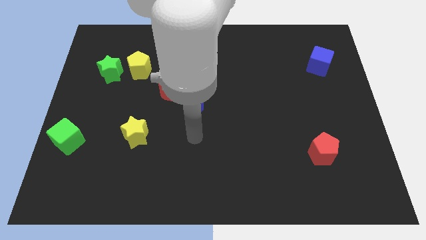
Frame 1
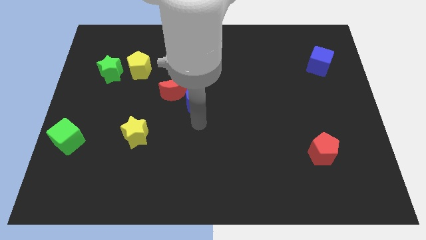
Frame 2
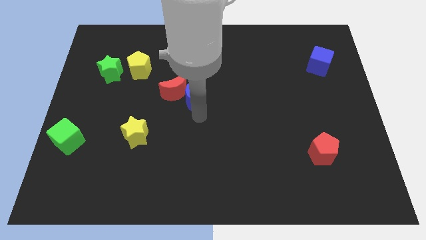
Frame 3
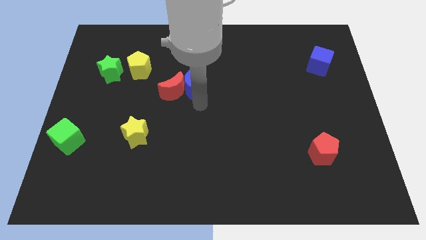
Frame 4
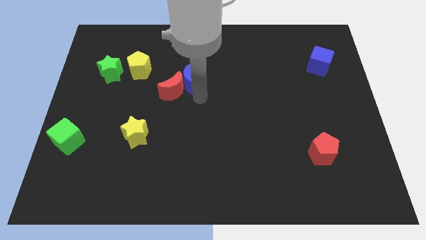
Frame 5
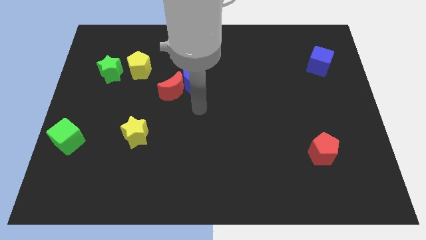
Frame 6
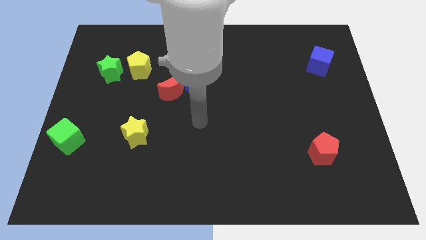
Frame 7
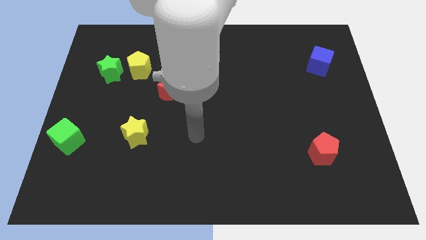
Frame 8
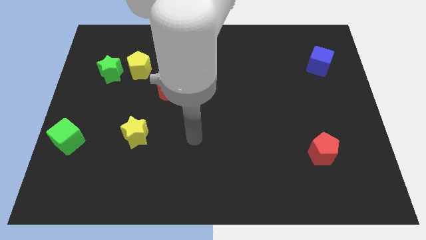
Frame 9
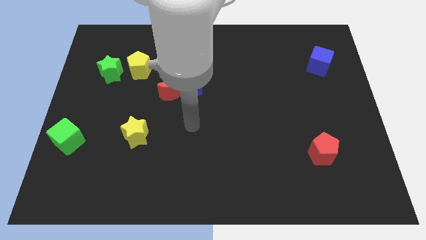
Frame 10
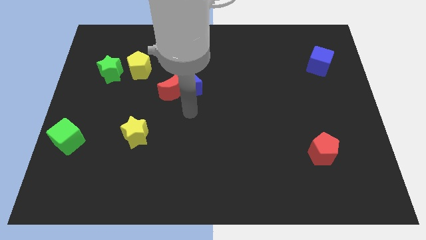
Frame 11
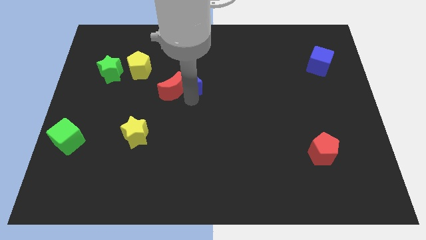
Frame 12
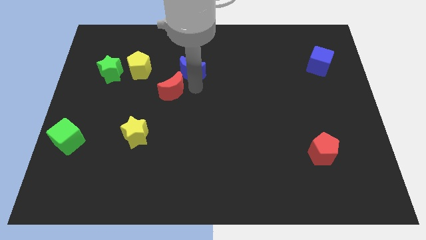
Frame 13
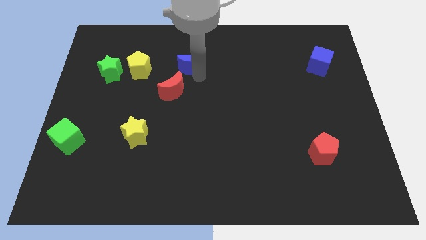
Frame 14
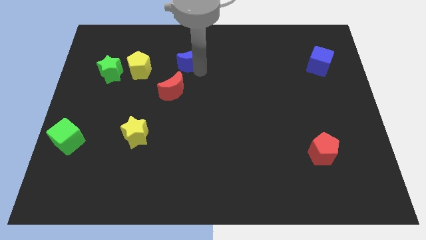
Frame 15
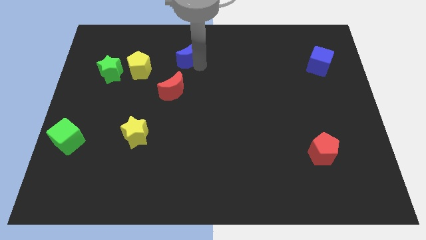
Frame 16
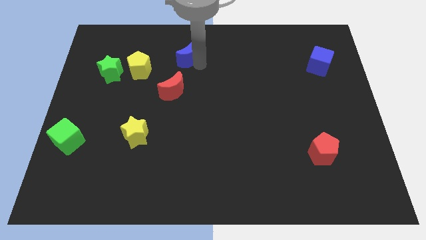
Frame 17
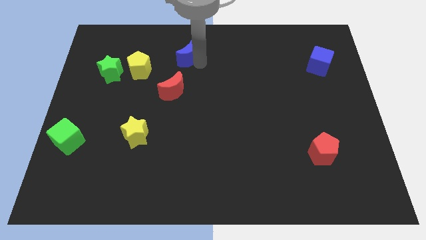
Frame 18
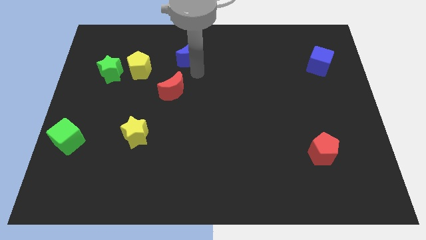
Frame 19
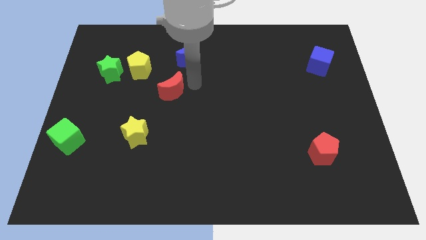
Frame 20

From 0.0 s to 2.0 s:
put the blue moon diagonally top right to the red moon

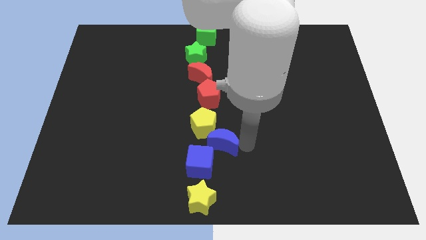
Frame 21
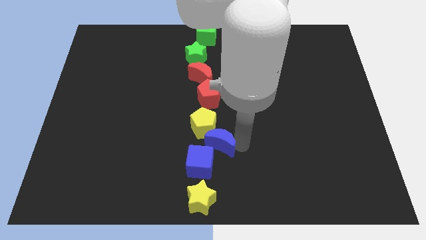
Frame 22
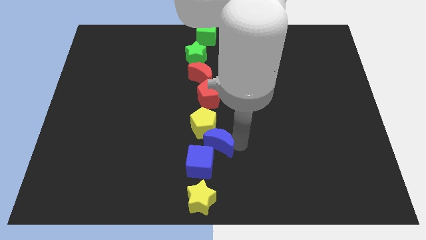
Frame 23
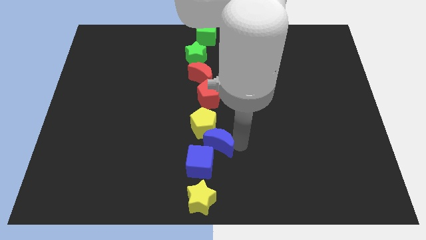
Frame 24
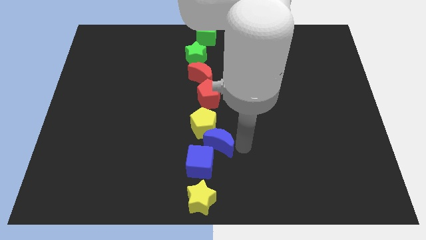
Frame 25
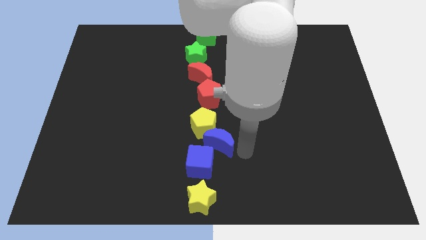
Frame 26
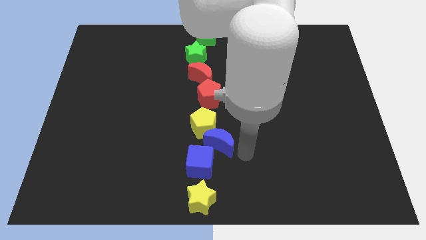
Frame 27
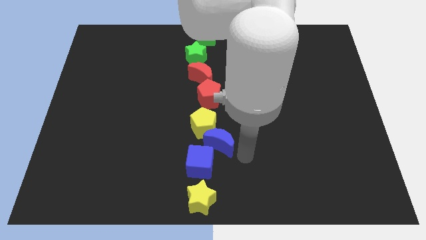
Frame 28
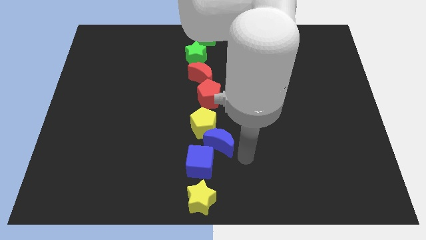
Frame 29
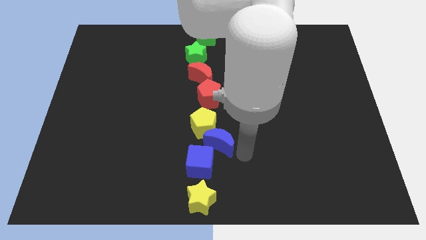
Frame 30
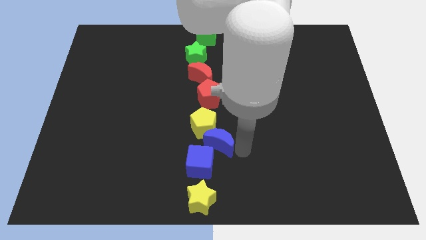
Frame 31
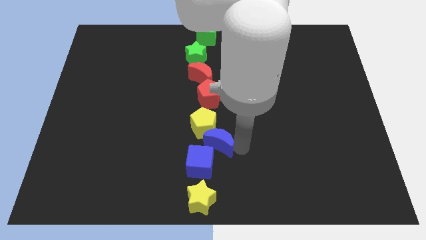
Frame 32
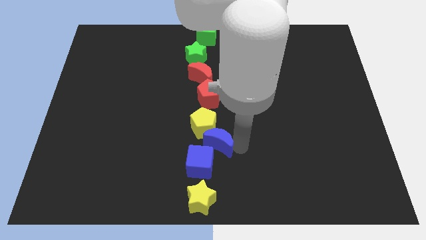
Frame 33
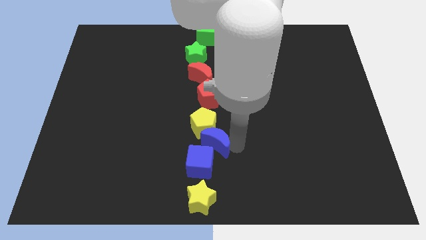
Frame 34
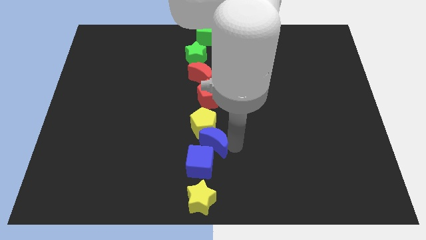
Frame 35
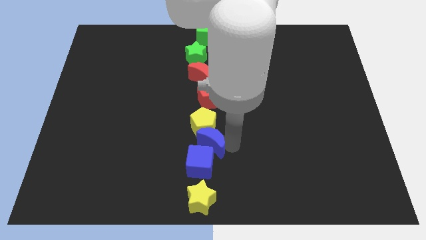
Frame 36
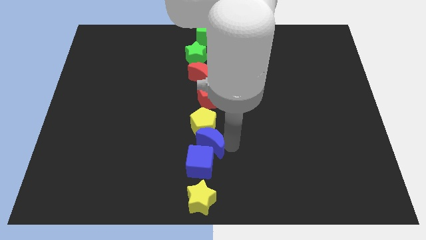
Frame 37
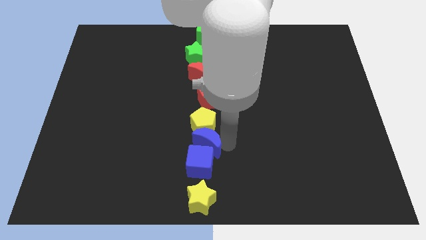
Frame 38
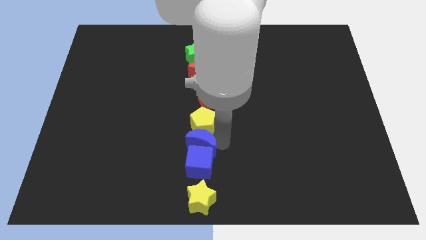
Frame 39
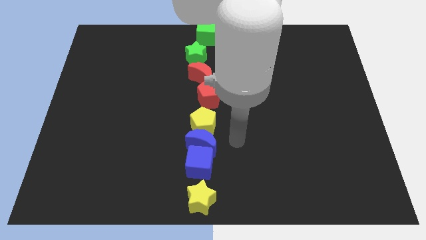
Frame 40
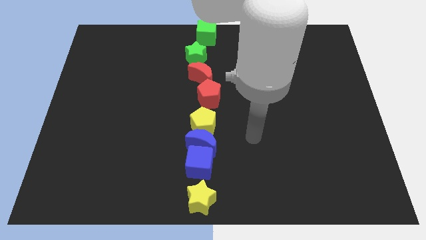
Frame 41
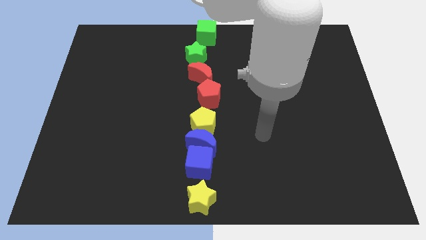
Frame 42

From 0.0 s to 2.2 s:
place the blue crescent into the blue cube

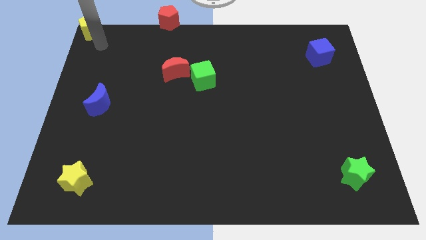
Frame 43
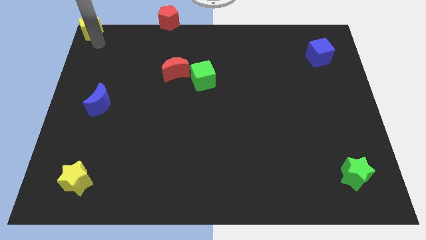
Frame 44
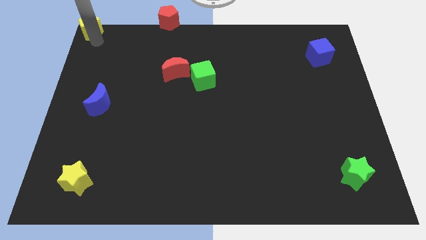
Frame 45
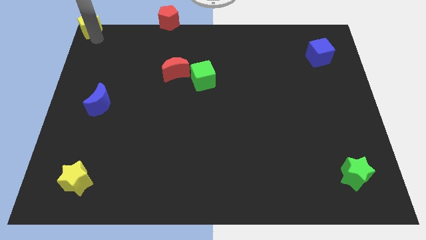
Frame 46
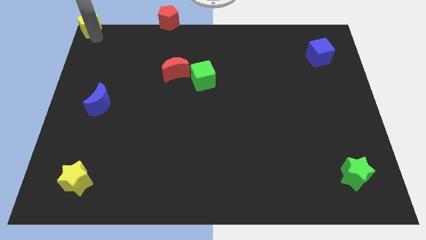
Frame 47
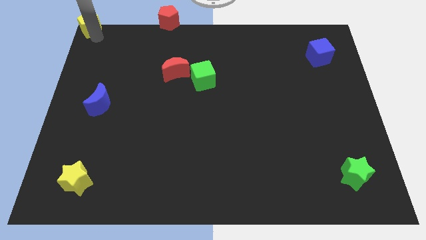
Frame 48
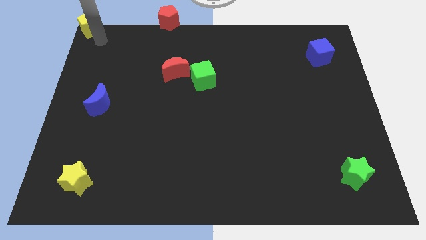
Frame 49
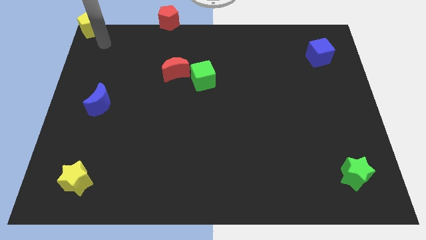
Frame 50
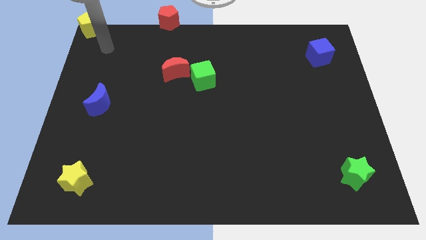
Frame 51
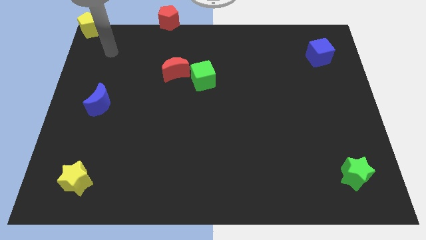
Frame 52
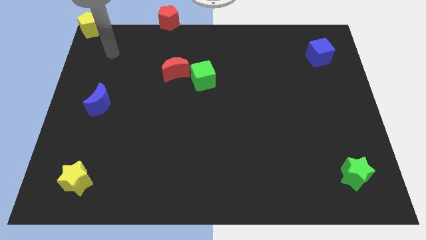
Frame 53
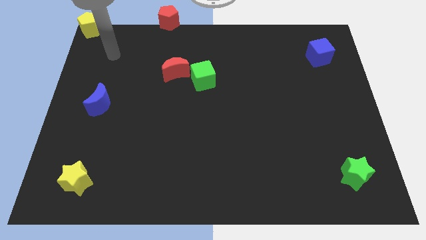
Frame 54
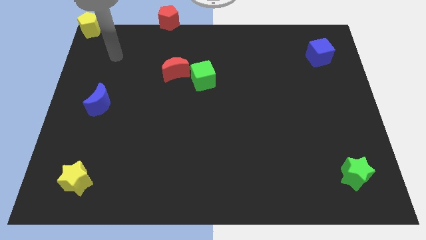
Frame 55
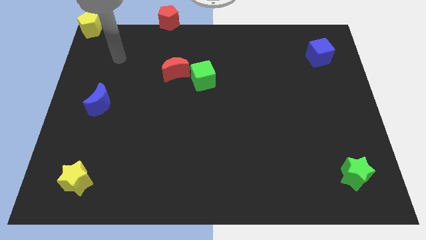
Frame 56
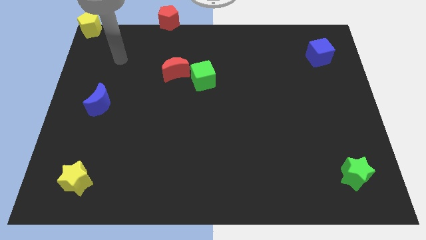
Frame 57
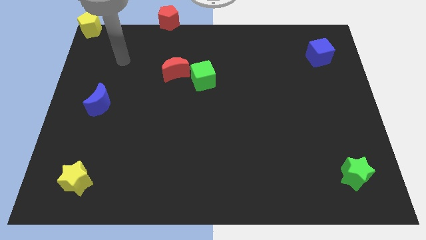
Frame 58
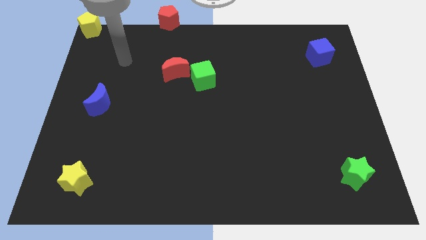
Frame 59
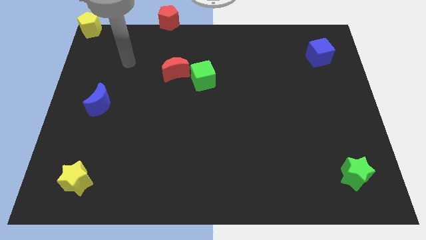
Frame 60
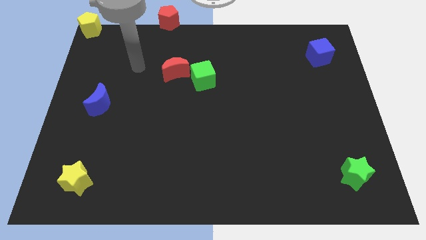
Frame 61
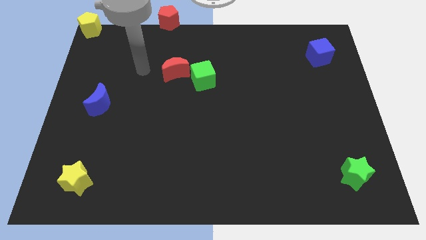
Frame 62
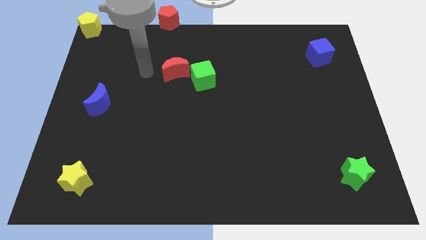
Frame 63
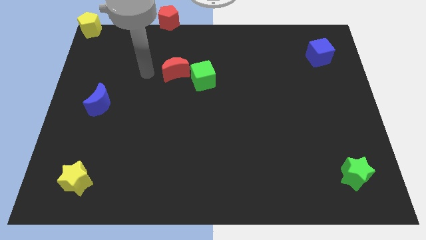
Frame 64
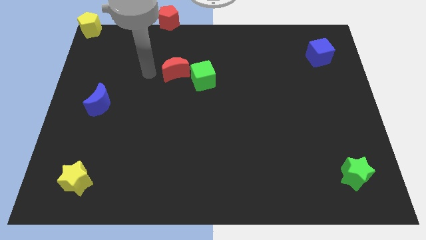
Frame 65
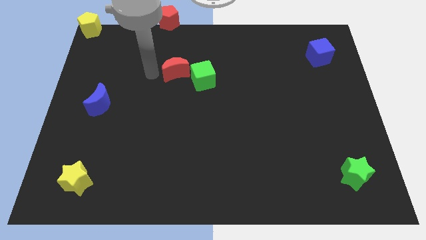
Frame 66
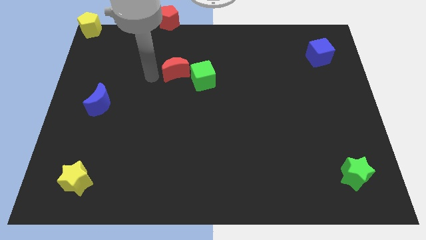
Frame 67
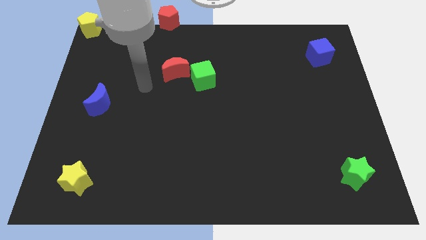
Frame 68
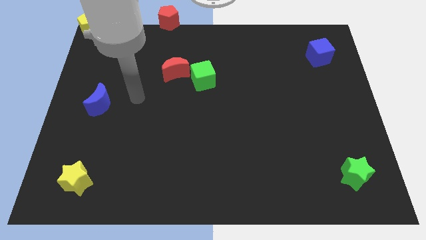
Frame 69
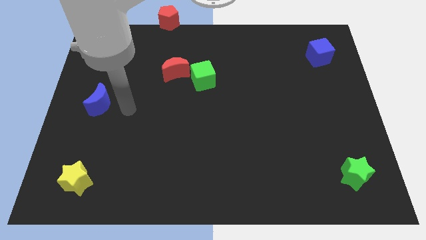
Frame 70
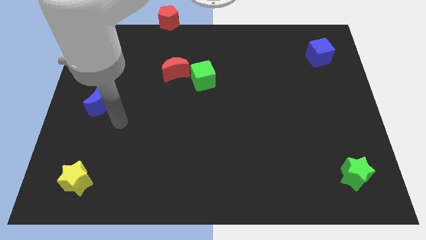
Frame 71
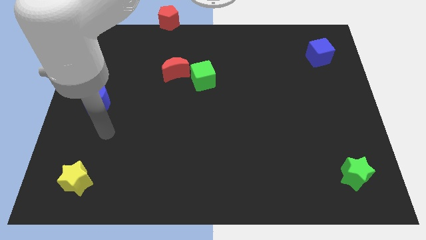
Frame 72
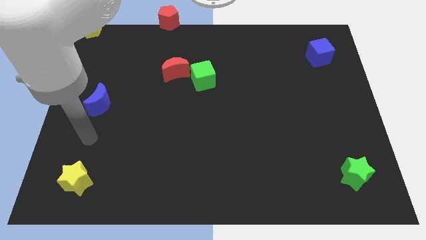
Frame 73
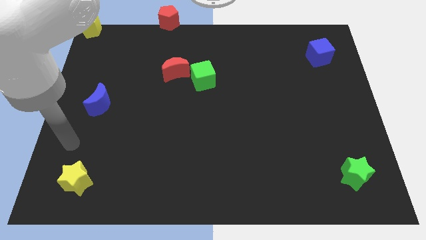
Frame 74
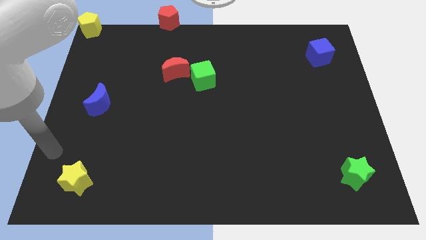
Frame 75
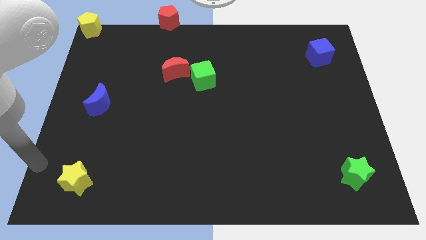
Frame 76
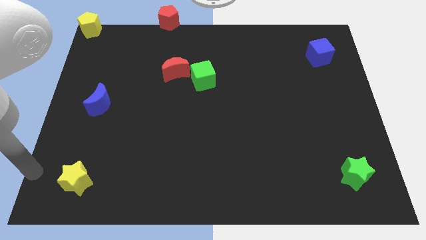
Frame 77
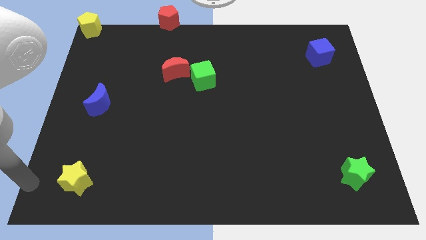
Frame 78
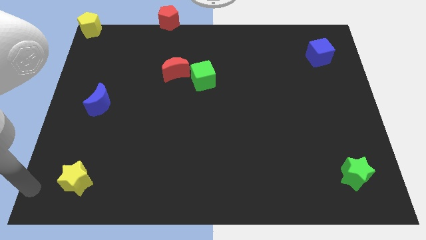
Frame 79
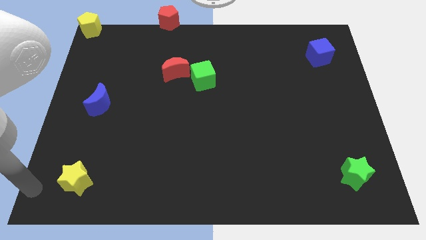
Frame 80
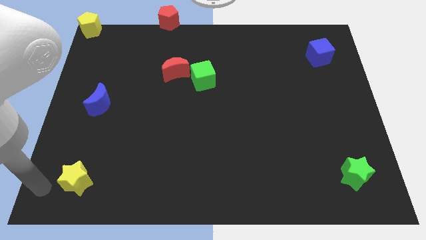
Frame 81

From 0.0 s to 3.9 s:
move your arm towards yellow star

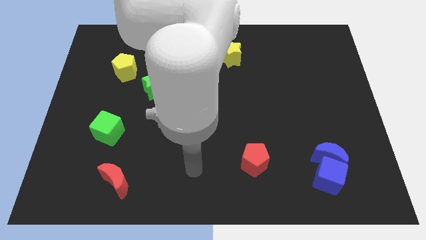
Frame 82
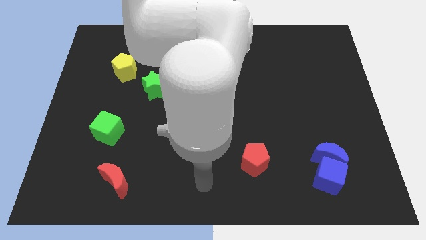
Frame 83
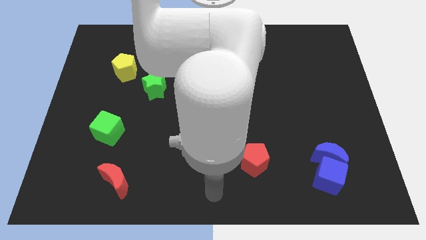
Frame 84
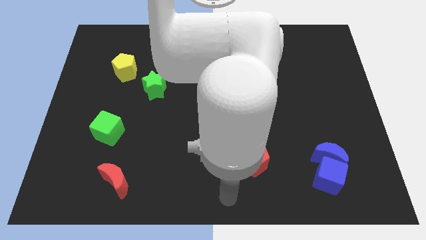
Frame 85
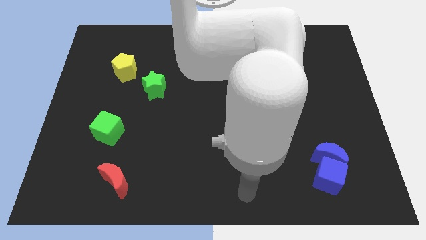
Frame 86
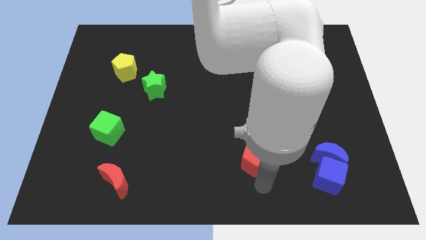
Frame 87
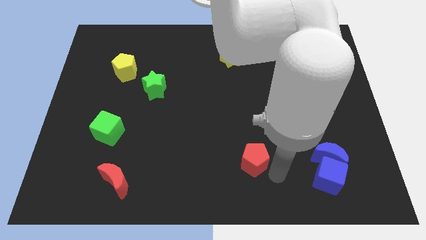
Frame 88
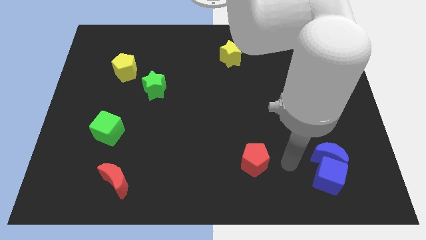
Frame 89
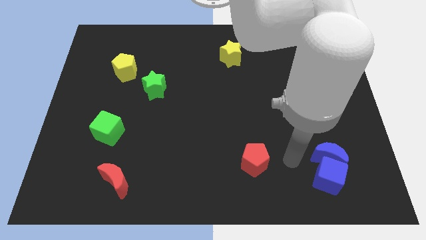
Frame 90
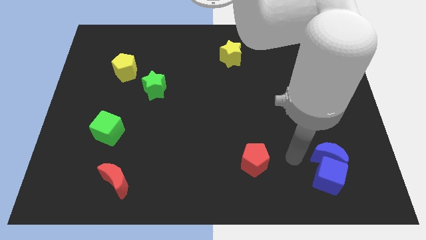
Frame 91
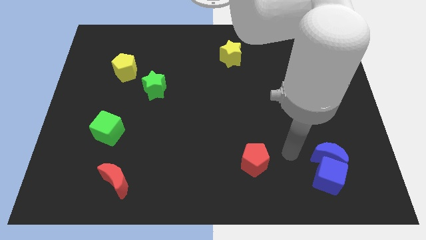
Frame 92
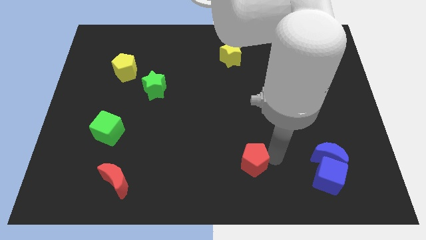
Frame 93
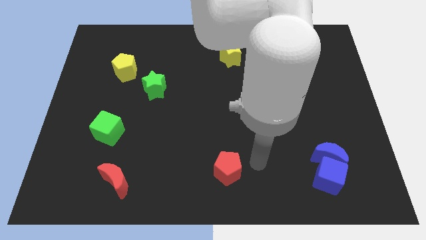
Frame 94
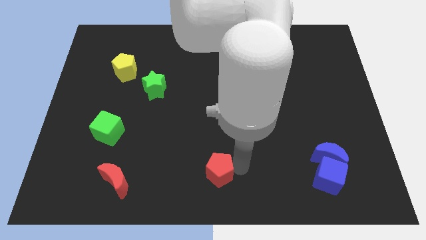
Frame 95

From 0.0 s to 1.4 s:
move the red pentagon to the bottom center
